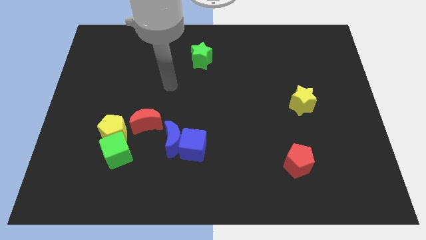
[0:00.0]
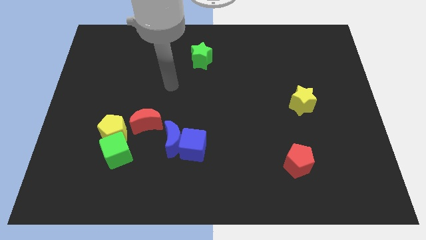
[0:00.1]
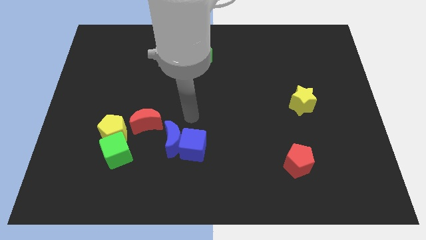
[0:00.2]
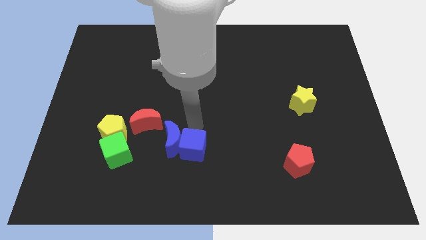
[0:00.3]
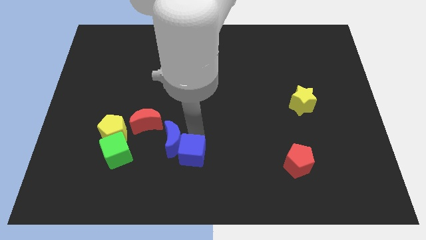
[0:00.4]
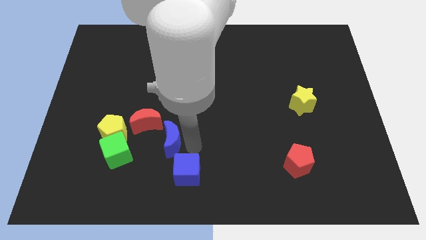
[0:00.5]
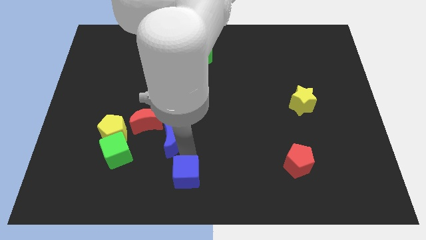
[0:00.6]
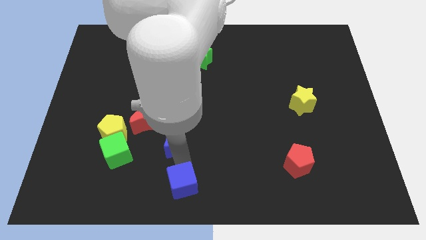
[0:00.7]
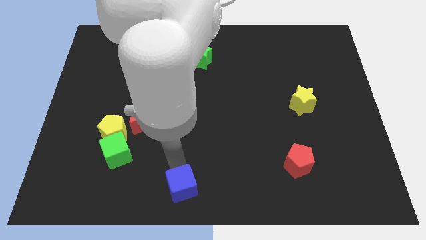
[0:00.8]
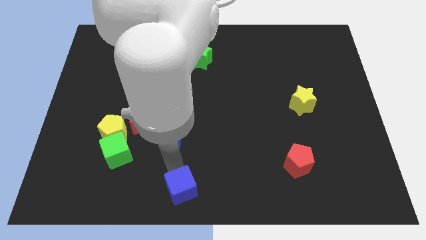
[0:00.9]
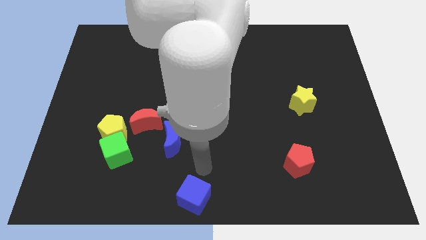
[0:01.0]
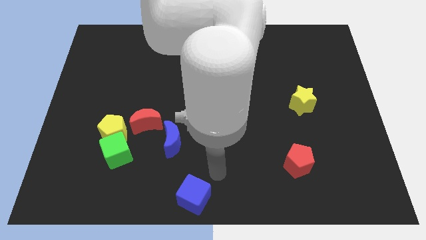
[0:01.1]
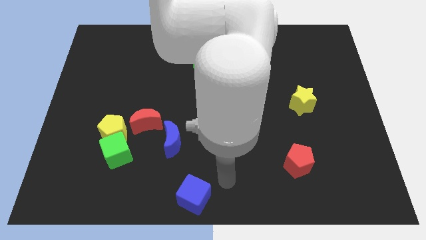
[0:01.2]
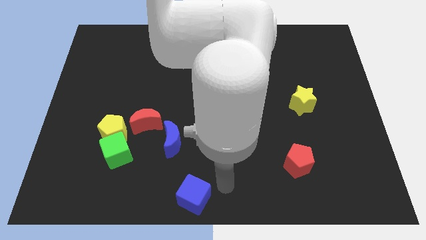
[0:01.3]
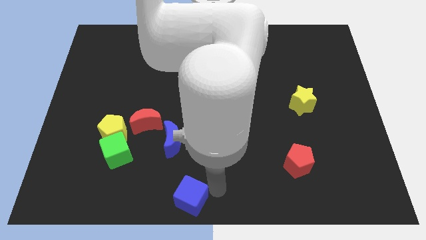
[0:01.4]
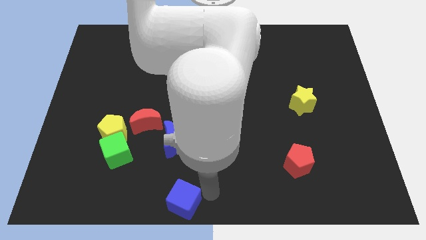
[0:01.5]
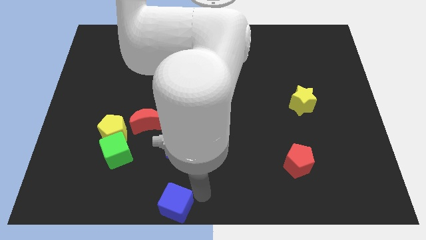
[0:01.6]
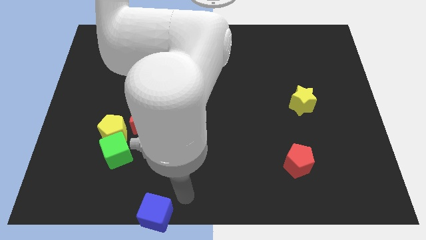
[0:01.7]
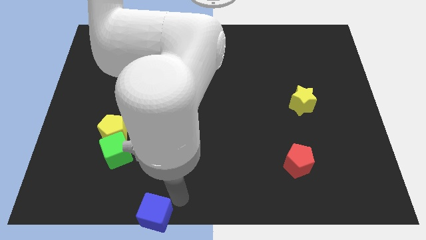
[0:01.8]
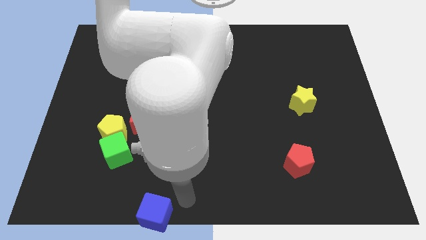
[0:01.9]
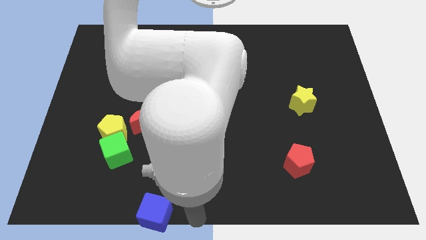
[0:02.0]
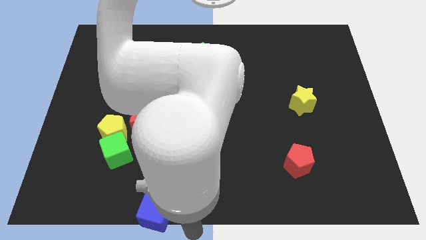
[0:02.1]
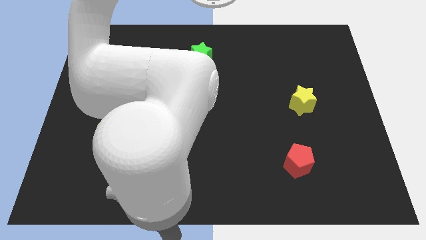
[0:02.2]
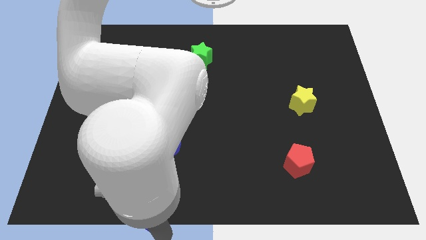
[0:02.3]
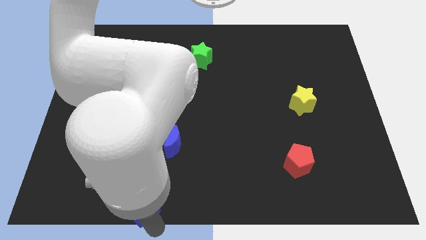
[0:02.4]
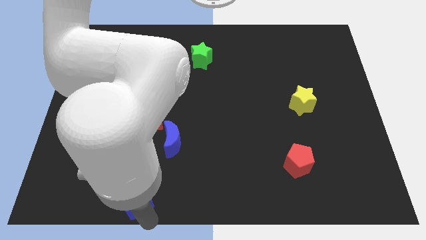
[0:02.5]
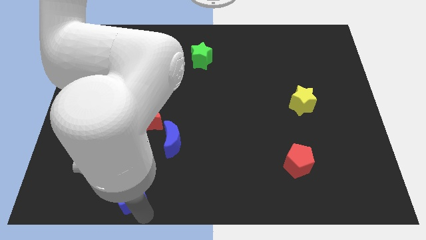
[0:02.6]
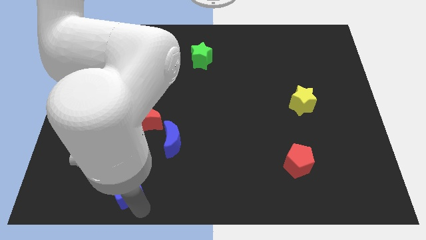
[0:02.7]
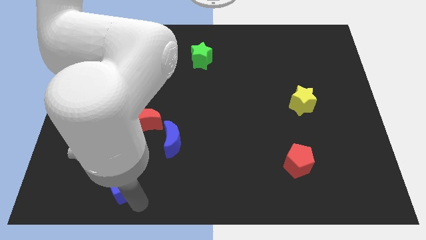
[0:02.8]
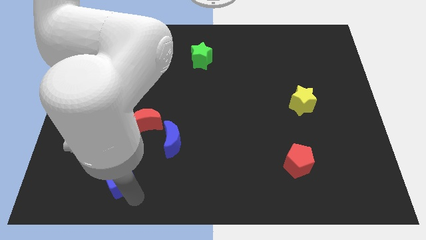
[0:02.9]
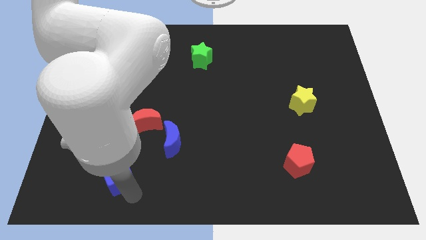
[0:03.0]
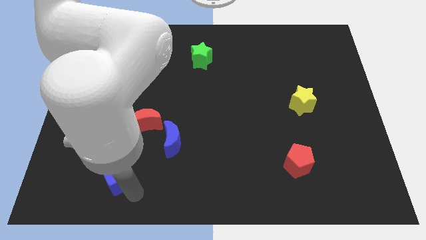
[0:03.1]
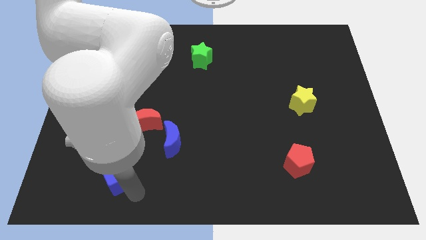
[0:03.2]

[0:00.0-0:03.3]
move the blue cube next to the green cube

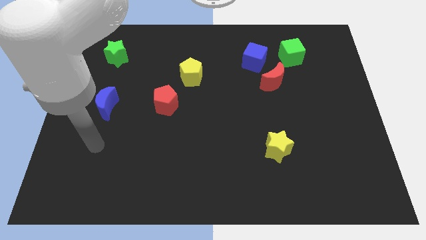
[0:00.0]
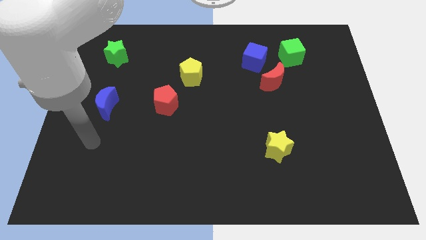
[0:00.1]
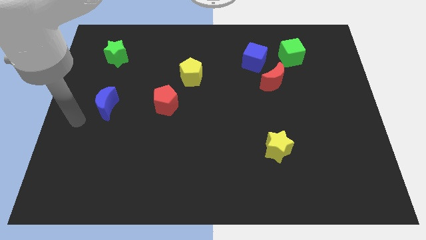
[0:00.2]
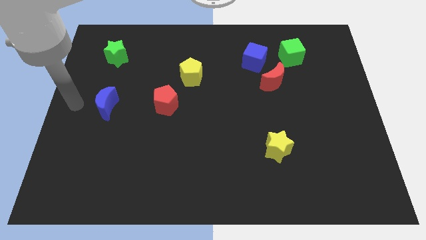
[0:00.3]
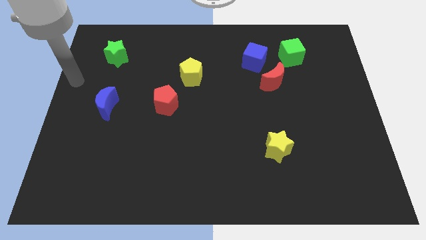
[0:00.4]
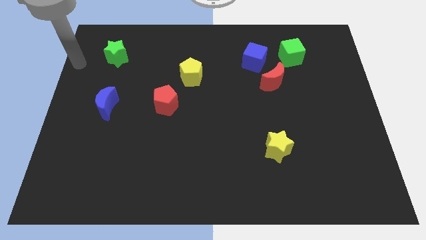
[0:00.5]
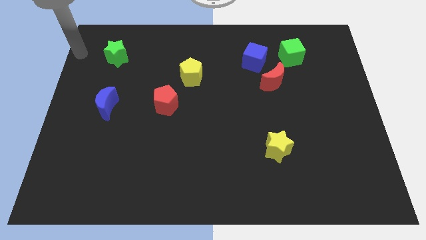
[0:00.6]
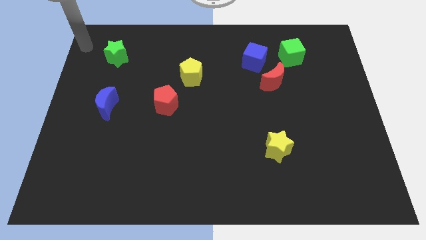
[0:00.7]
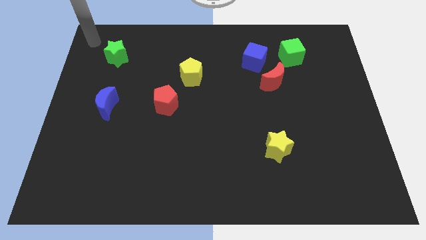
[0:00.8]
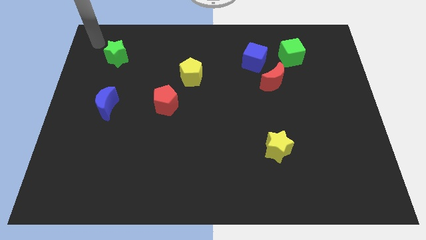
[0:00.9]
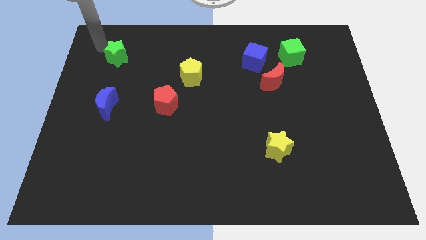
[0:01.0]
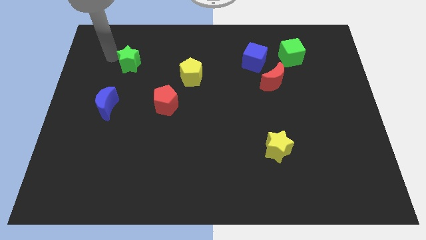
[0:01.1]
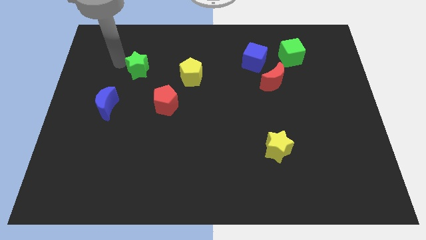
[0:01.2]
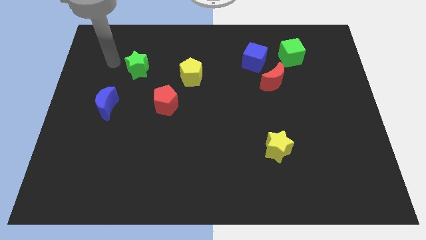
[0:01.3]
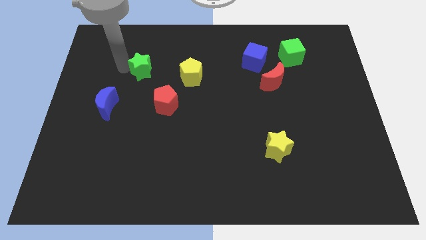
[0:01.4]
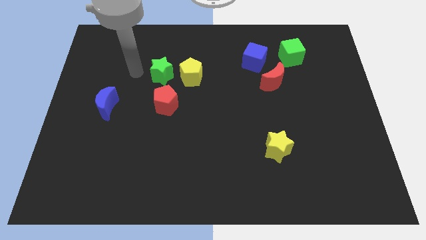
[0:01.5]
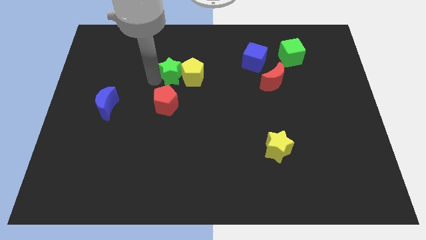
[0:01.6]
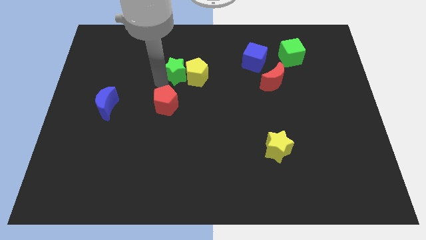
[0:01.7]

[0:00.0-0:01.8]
push the green star towards the yellow pentagon

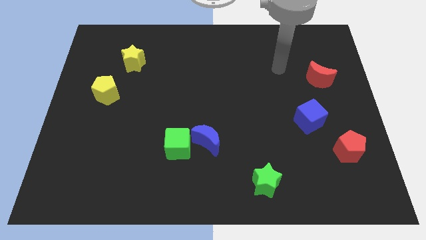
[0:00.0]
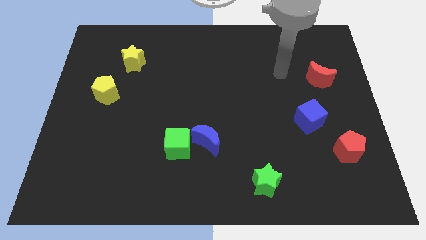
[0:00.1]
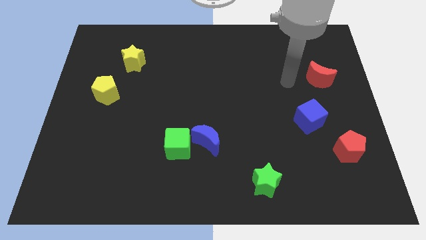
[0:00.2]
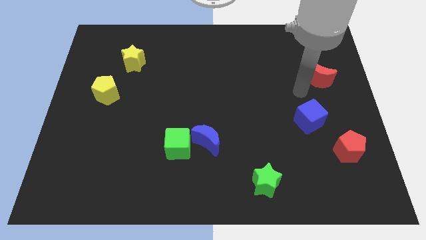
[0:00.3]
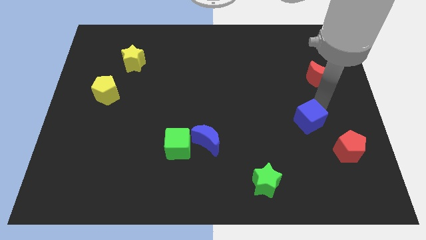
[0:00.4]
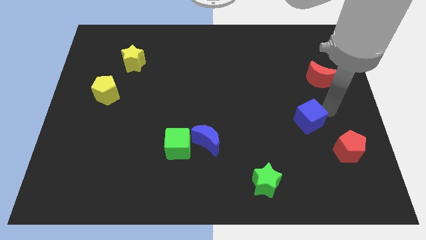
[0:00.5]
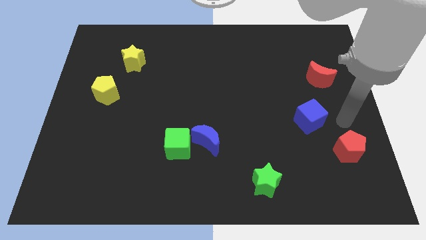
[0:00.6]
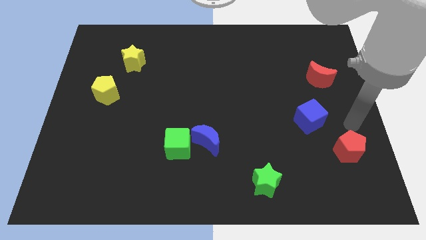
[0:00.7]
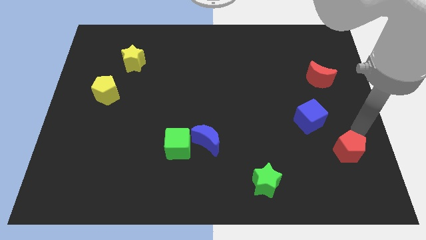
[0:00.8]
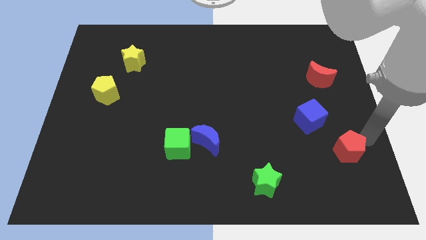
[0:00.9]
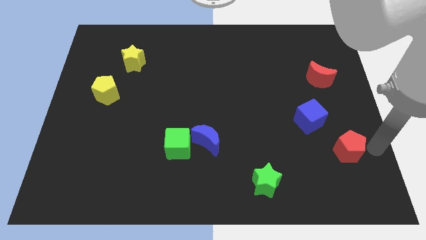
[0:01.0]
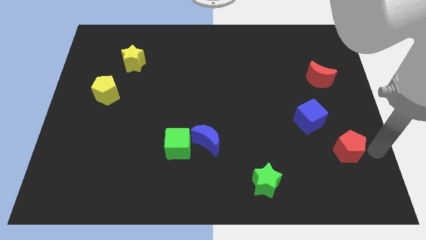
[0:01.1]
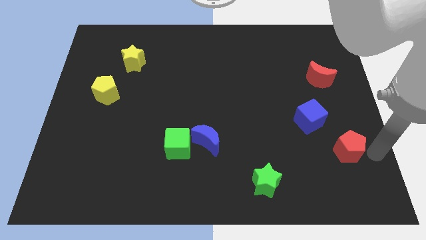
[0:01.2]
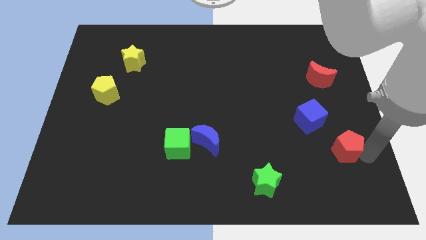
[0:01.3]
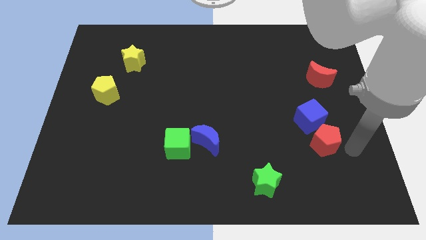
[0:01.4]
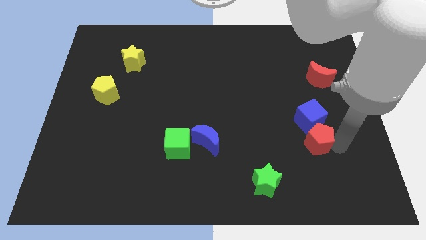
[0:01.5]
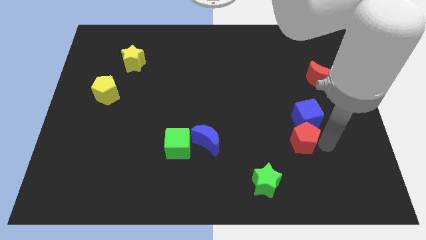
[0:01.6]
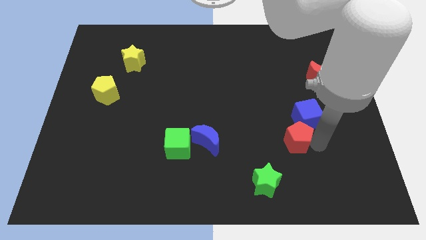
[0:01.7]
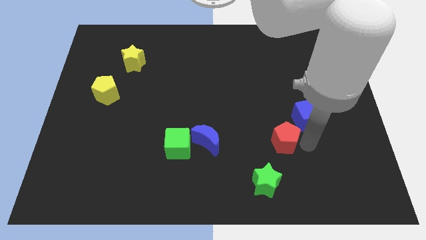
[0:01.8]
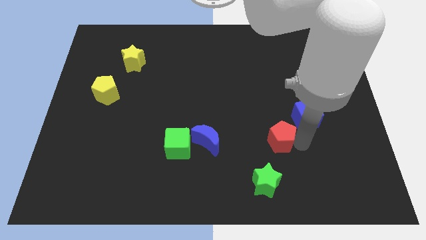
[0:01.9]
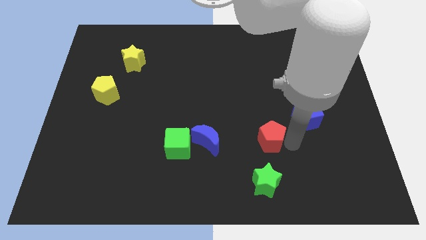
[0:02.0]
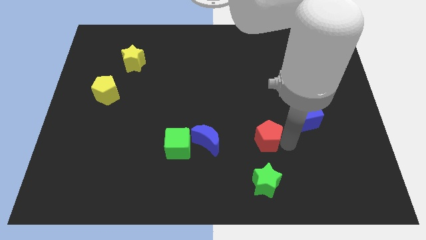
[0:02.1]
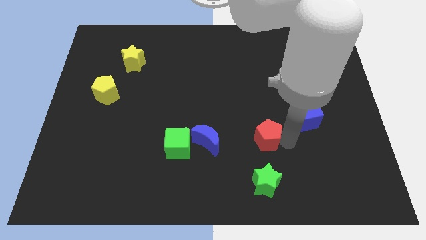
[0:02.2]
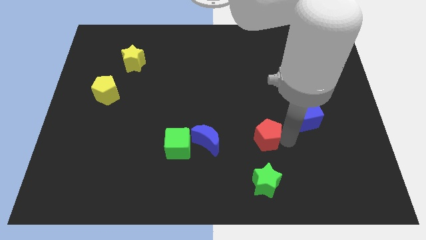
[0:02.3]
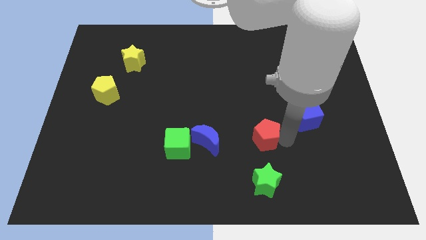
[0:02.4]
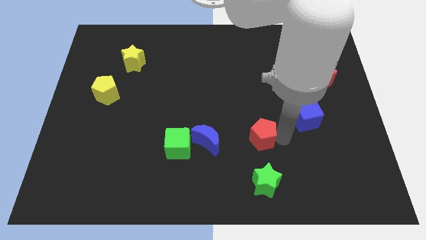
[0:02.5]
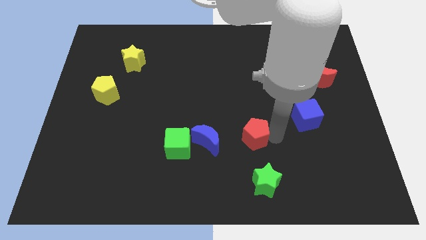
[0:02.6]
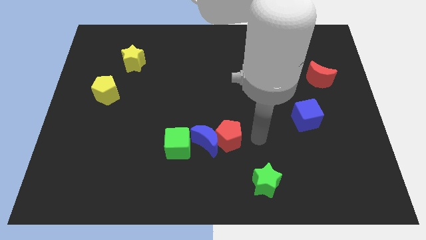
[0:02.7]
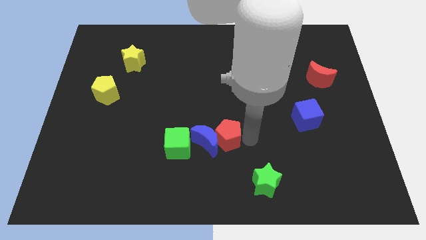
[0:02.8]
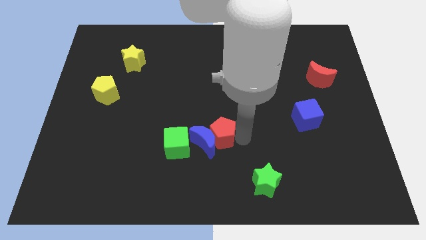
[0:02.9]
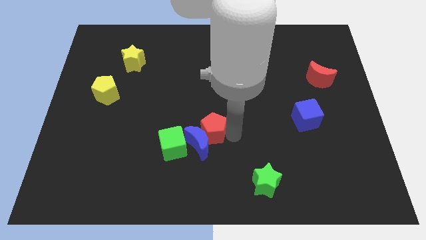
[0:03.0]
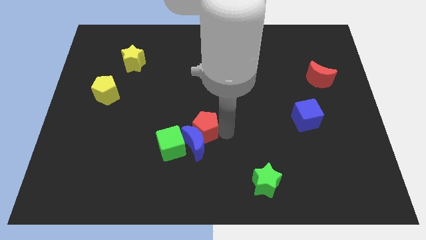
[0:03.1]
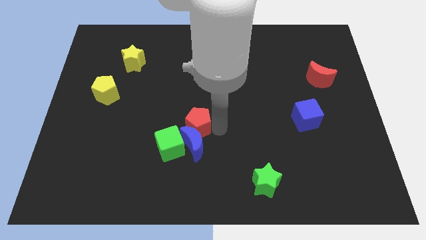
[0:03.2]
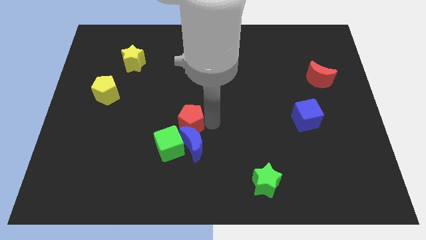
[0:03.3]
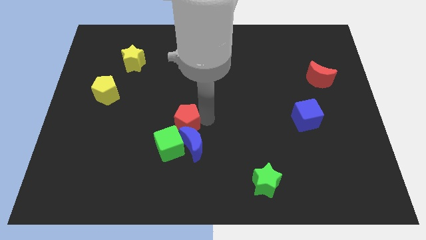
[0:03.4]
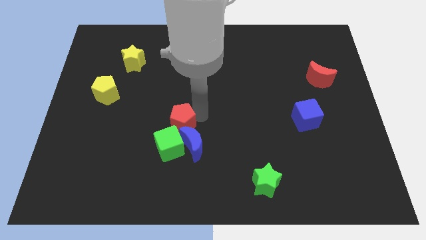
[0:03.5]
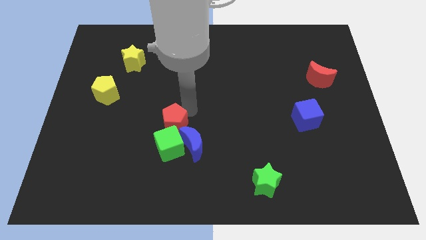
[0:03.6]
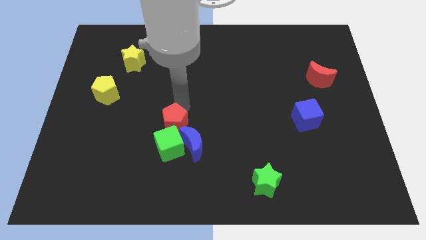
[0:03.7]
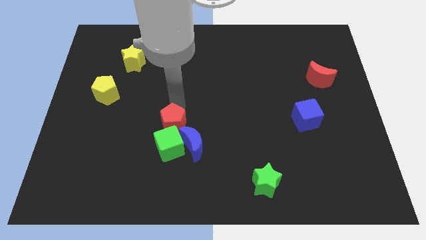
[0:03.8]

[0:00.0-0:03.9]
slide the red pentagon close to the green cube
